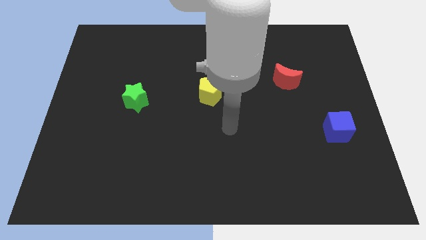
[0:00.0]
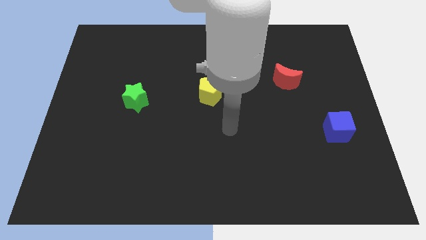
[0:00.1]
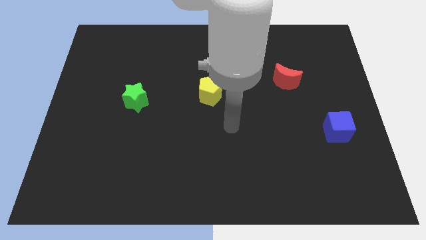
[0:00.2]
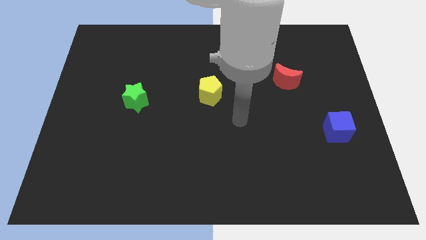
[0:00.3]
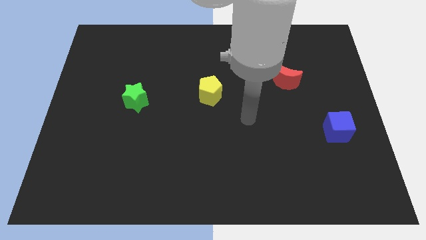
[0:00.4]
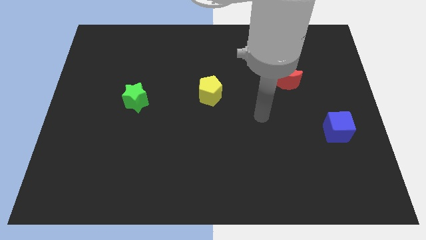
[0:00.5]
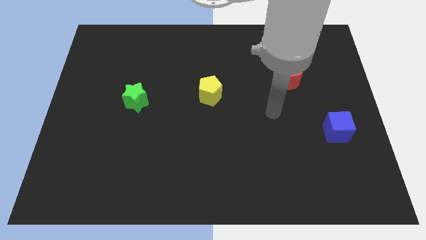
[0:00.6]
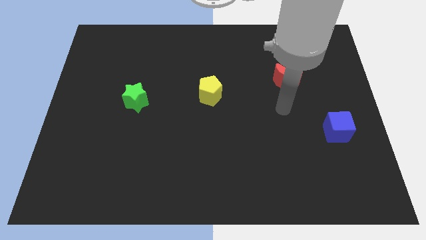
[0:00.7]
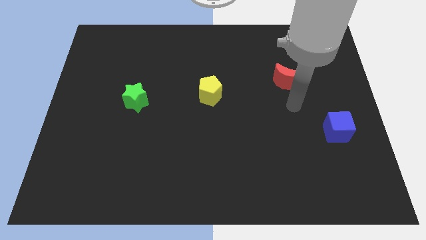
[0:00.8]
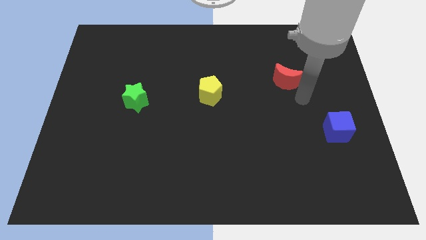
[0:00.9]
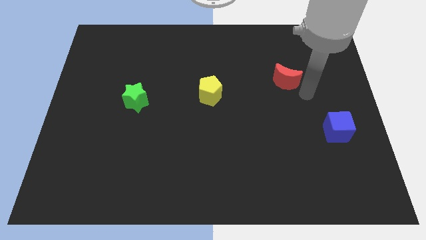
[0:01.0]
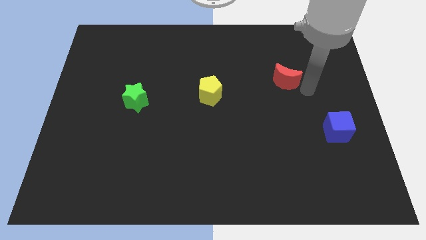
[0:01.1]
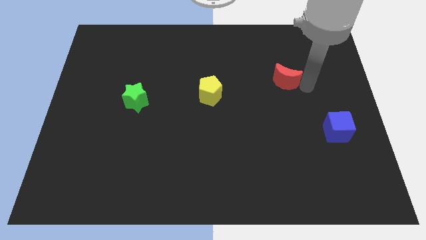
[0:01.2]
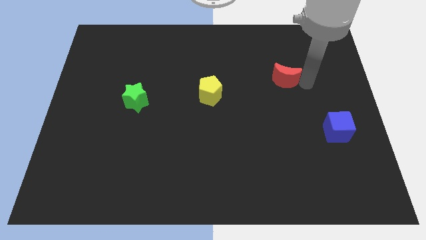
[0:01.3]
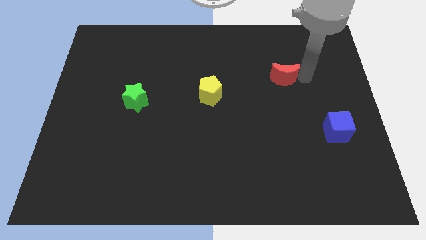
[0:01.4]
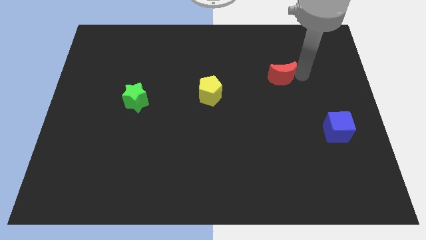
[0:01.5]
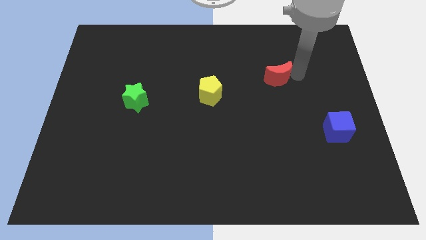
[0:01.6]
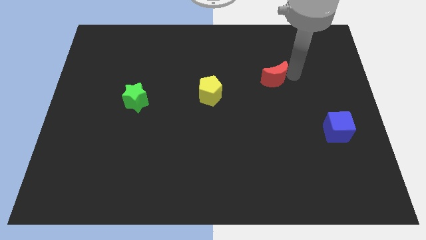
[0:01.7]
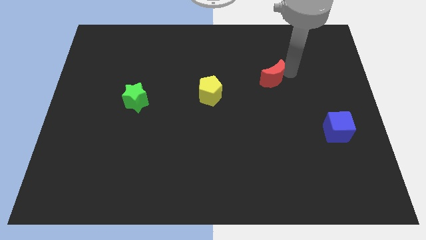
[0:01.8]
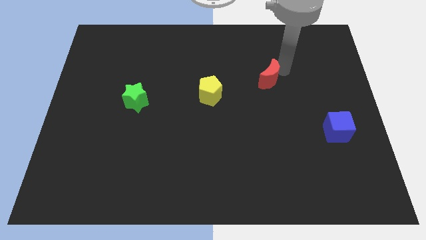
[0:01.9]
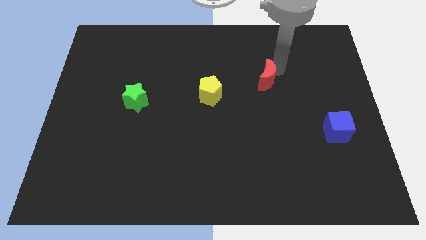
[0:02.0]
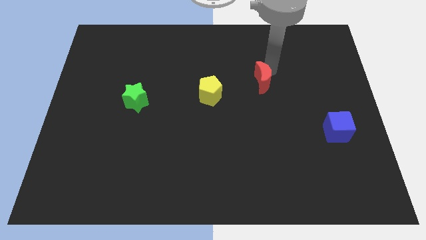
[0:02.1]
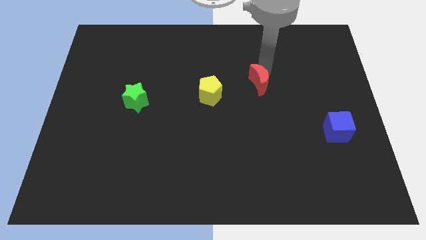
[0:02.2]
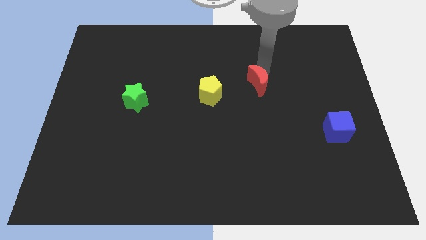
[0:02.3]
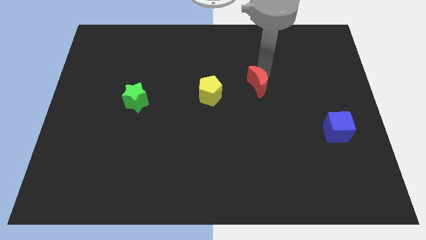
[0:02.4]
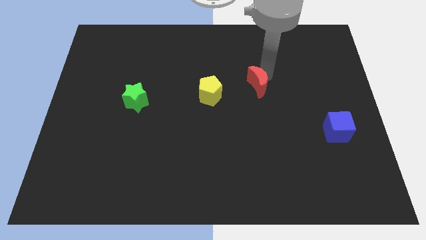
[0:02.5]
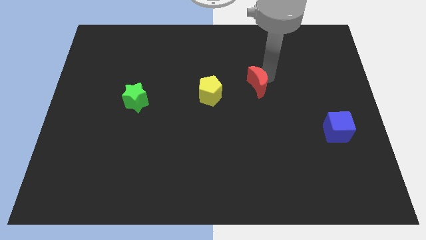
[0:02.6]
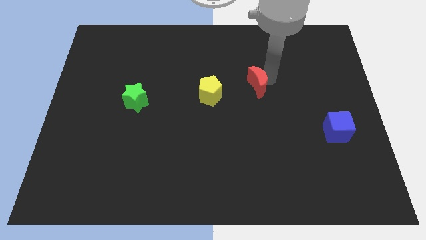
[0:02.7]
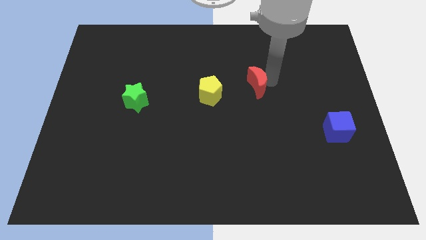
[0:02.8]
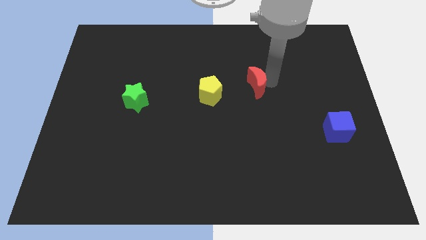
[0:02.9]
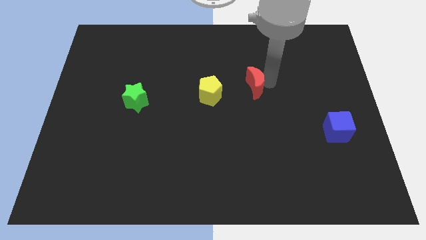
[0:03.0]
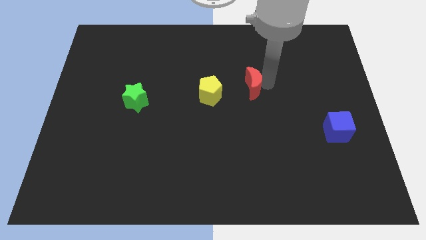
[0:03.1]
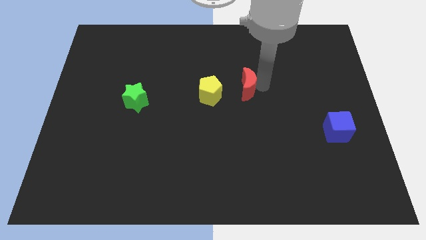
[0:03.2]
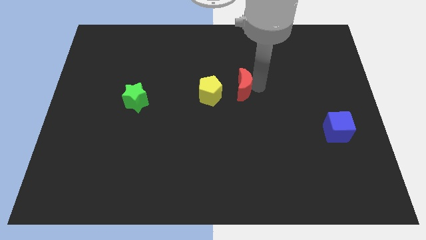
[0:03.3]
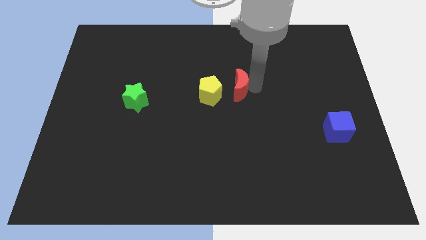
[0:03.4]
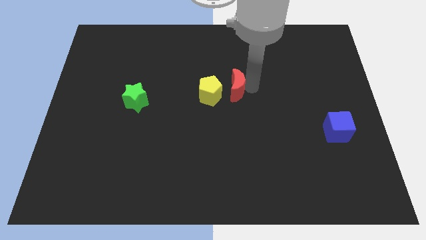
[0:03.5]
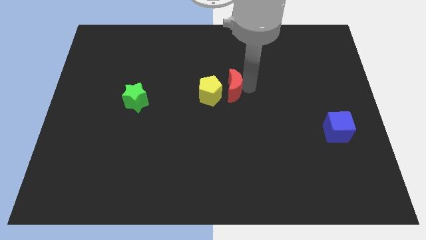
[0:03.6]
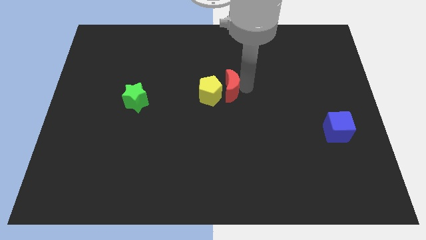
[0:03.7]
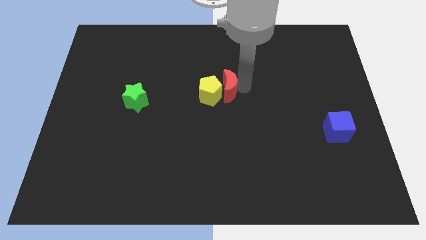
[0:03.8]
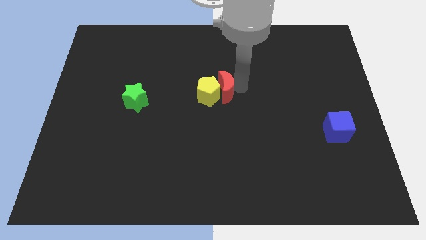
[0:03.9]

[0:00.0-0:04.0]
move the red block next to the yellow pentagon

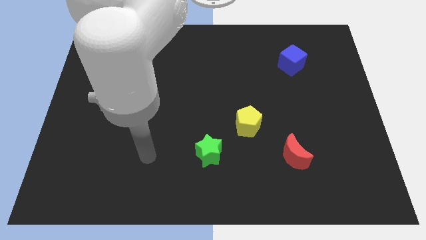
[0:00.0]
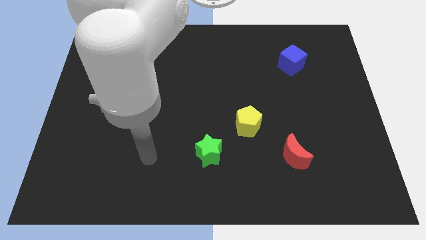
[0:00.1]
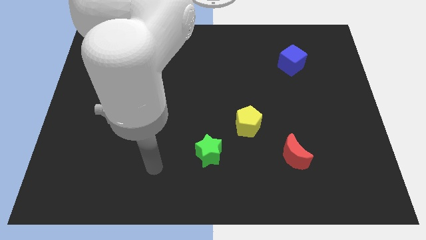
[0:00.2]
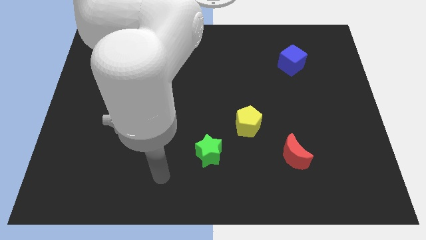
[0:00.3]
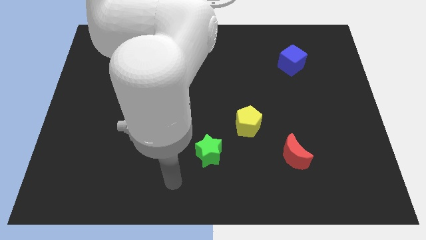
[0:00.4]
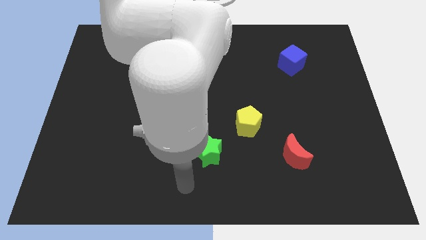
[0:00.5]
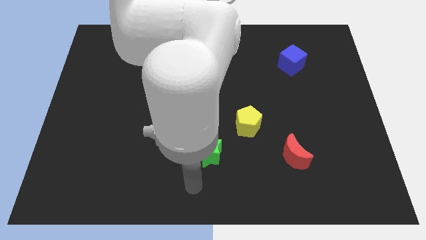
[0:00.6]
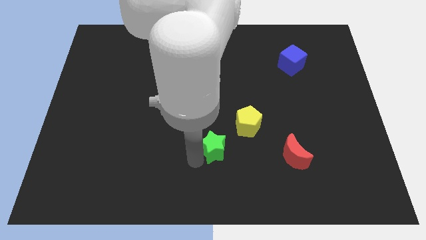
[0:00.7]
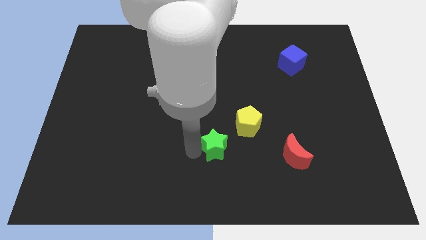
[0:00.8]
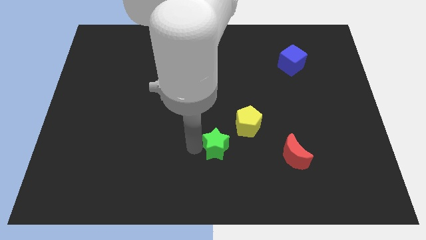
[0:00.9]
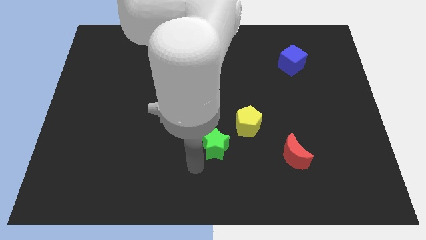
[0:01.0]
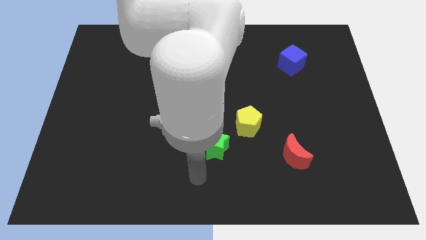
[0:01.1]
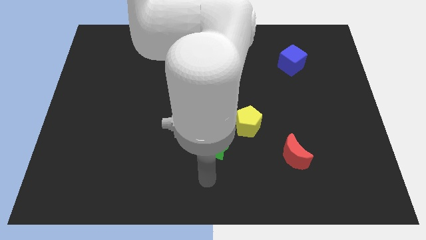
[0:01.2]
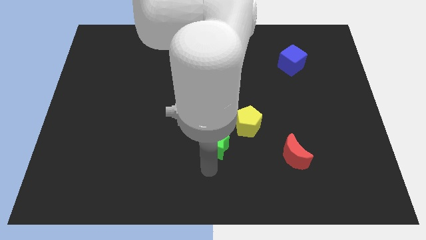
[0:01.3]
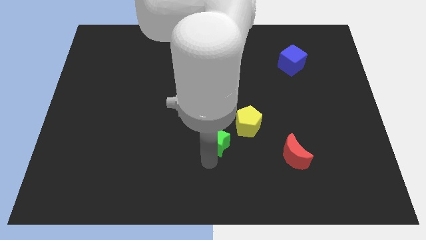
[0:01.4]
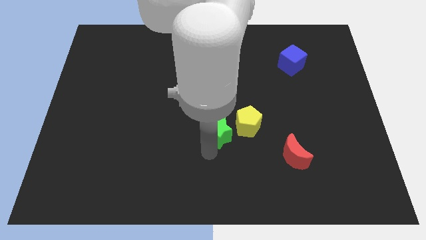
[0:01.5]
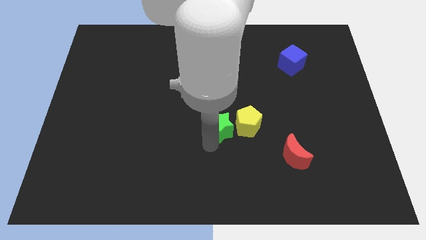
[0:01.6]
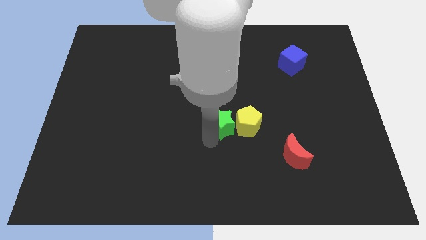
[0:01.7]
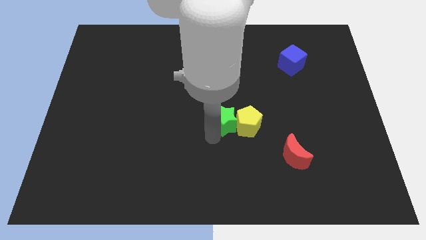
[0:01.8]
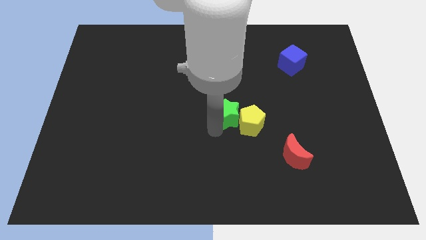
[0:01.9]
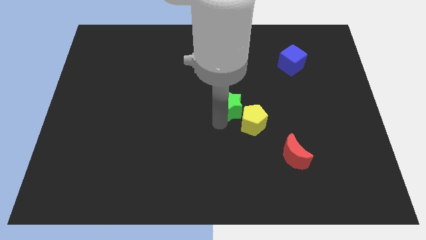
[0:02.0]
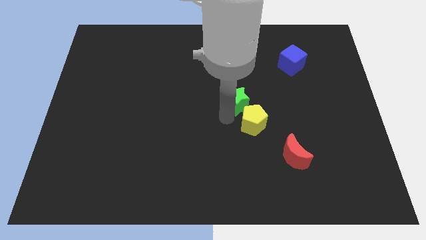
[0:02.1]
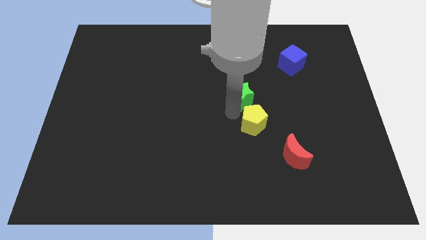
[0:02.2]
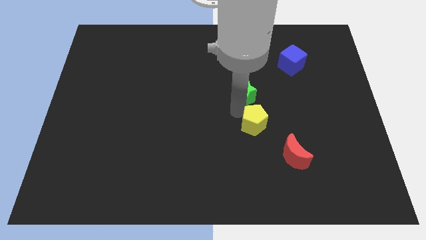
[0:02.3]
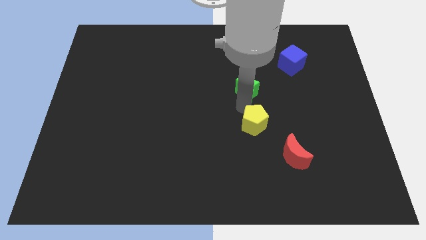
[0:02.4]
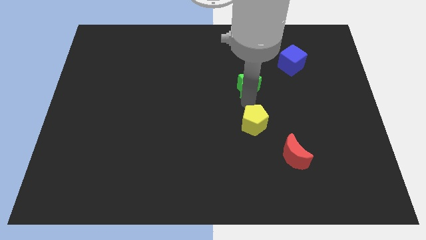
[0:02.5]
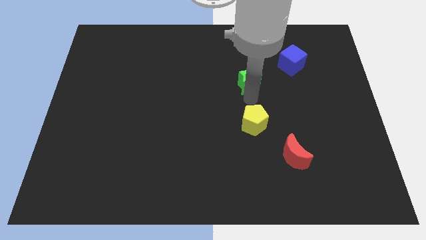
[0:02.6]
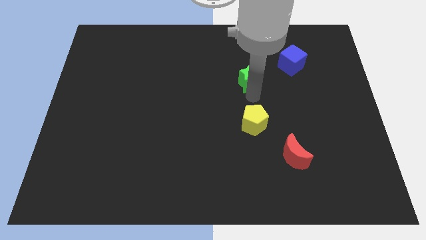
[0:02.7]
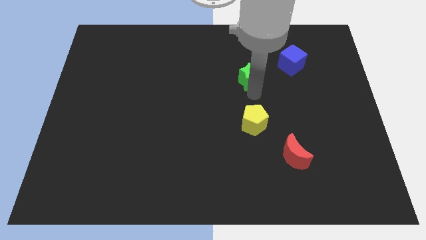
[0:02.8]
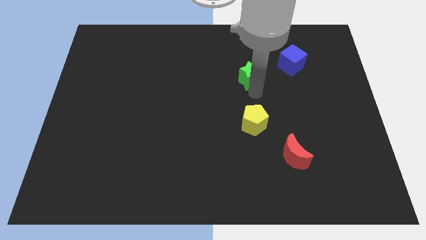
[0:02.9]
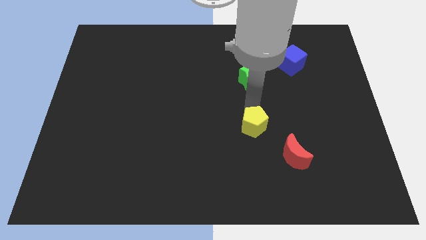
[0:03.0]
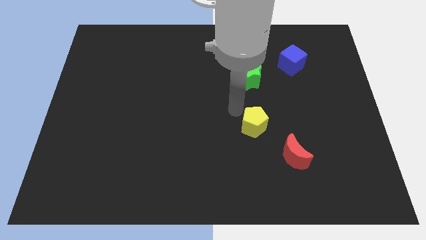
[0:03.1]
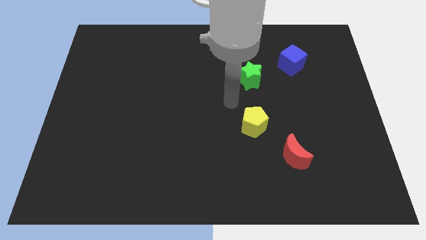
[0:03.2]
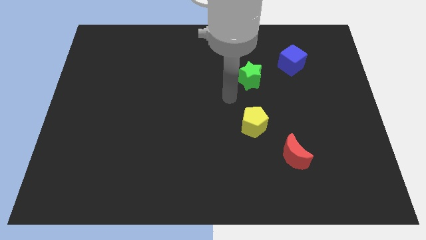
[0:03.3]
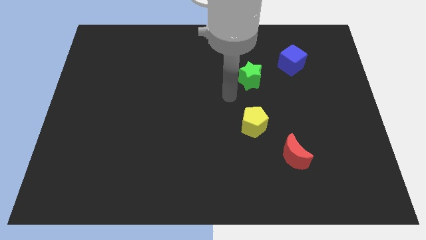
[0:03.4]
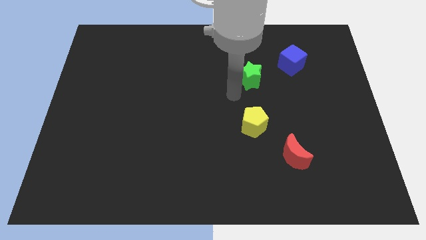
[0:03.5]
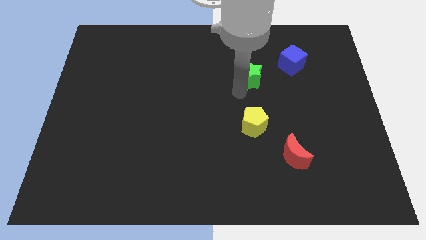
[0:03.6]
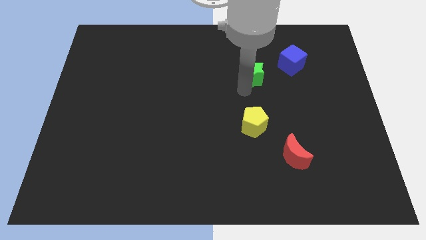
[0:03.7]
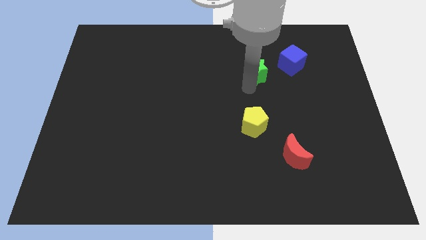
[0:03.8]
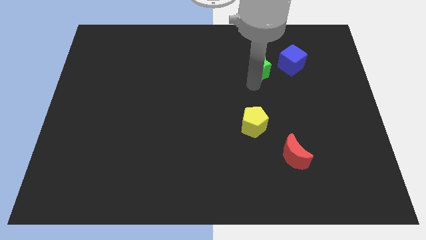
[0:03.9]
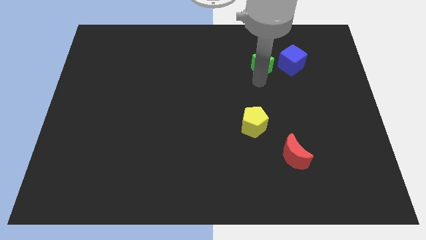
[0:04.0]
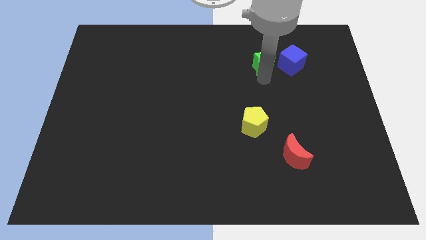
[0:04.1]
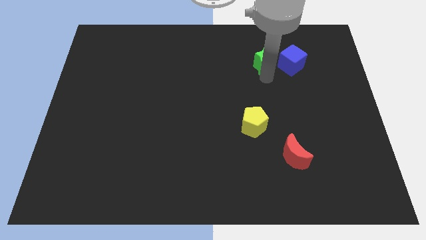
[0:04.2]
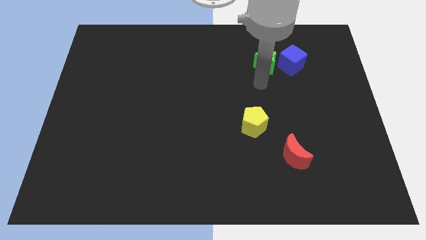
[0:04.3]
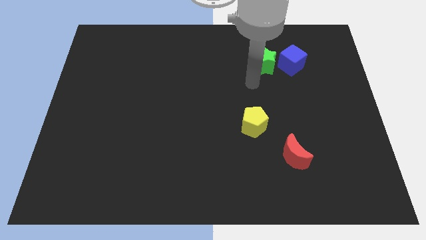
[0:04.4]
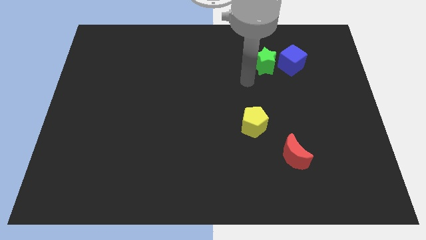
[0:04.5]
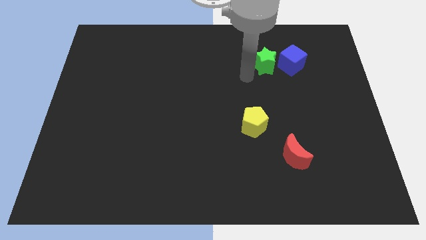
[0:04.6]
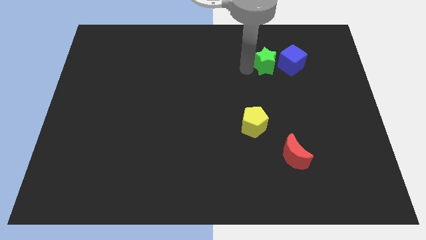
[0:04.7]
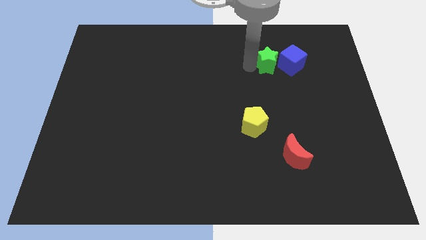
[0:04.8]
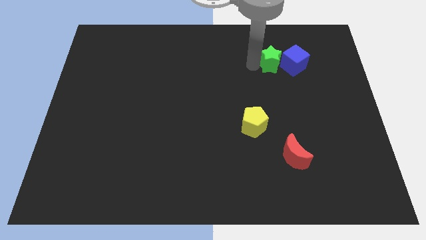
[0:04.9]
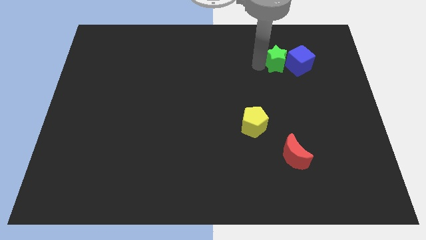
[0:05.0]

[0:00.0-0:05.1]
push the green star close to the blue cube
